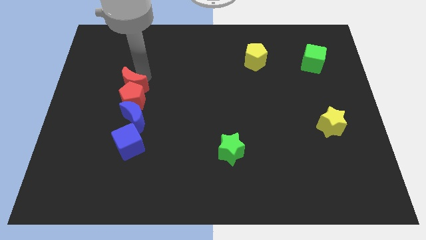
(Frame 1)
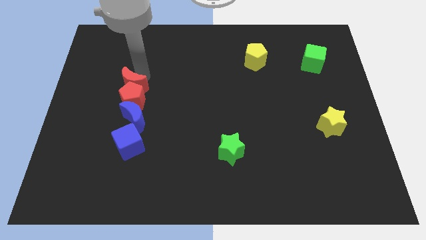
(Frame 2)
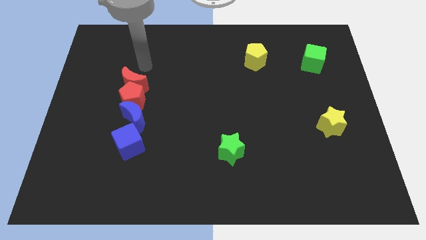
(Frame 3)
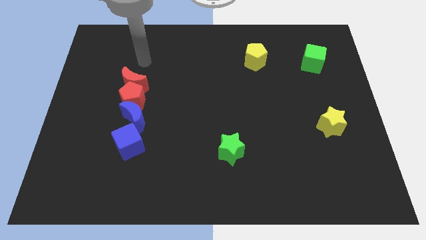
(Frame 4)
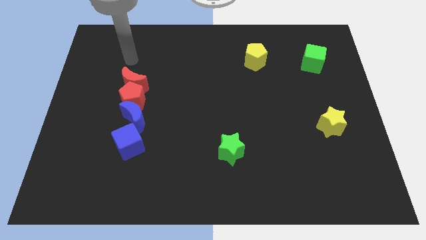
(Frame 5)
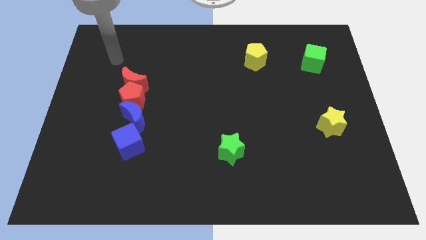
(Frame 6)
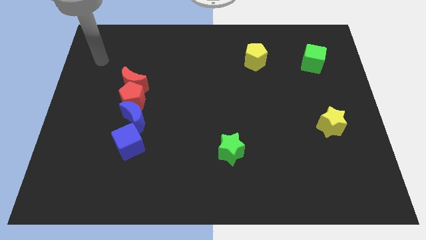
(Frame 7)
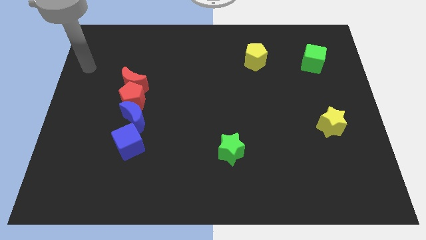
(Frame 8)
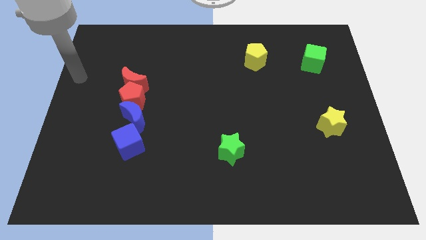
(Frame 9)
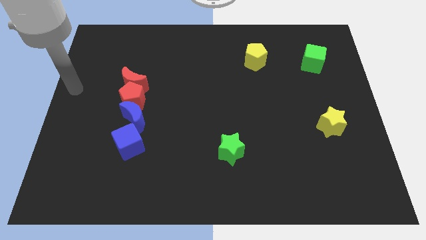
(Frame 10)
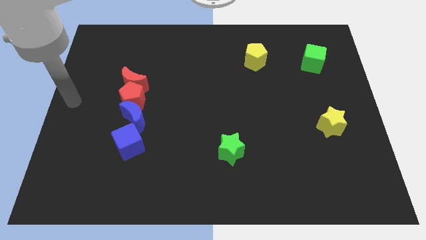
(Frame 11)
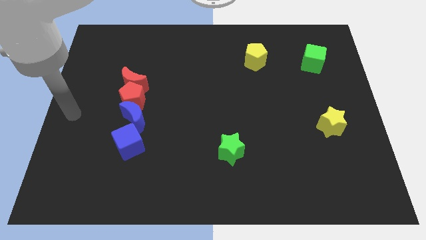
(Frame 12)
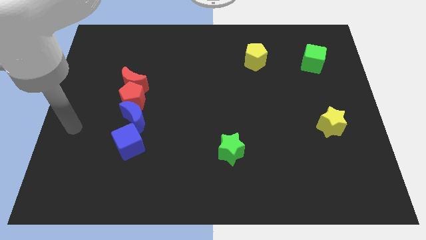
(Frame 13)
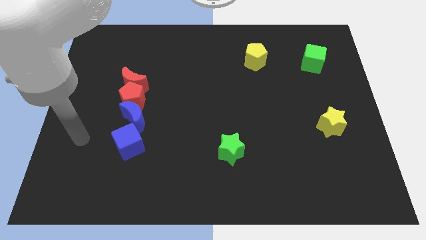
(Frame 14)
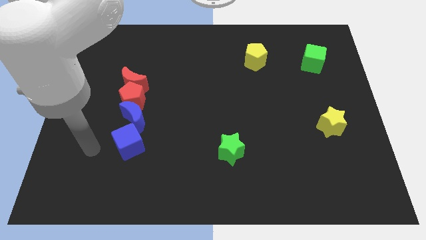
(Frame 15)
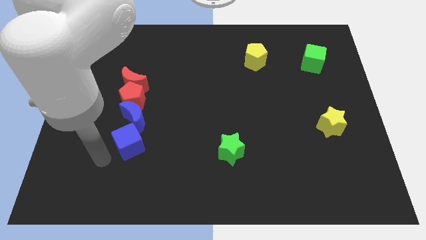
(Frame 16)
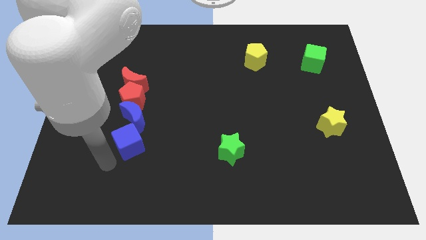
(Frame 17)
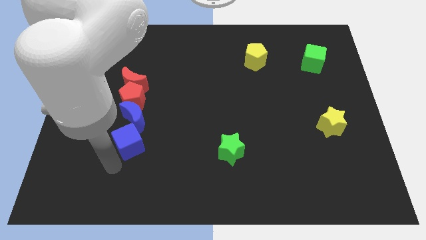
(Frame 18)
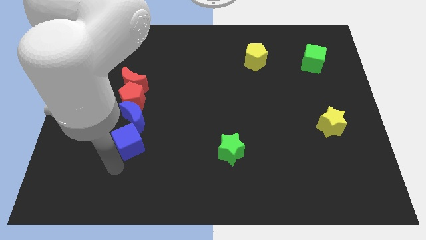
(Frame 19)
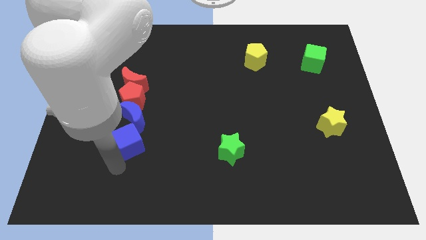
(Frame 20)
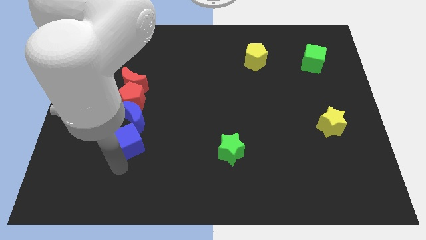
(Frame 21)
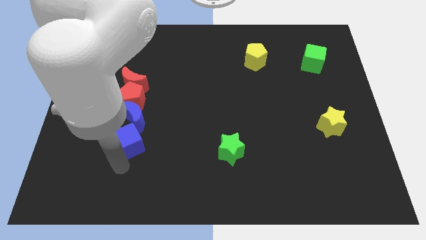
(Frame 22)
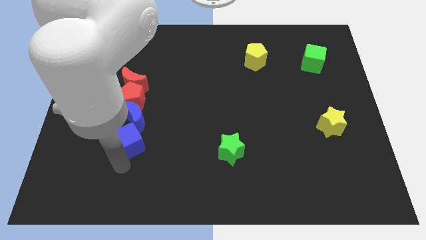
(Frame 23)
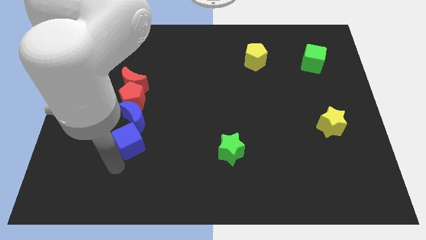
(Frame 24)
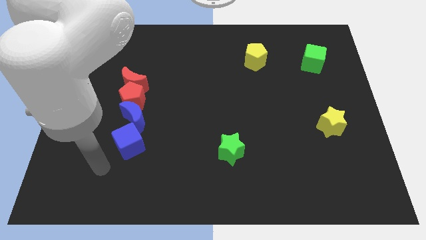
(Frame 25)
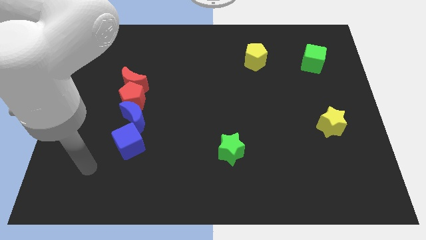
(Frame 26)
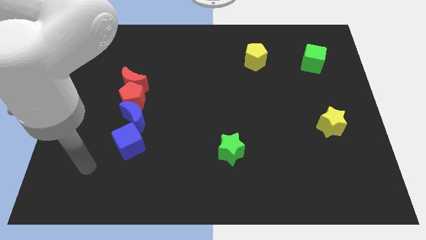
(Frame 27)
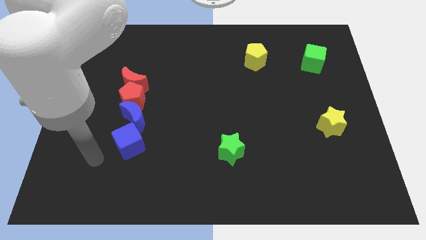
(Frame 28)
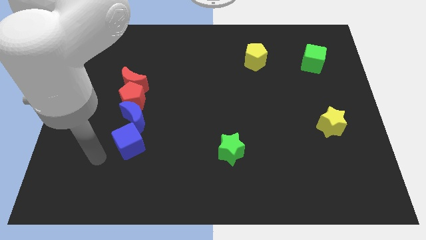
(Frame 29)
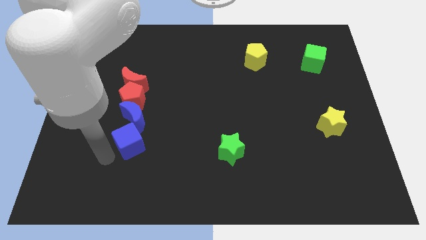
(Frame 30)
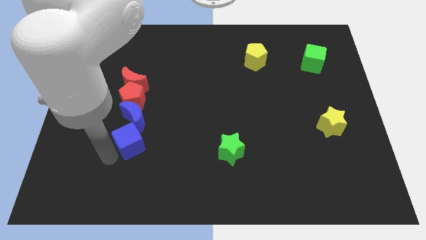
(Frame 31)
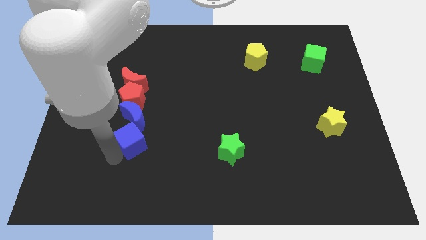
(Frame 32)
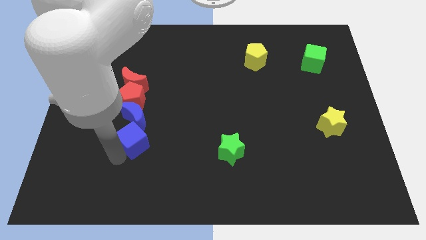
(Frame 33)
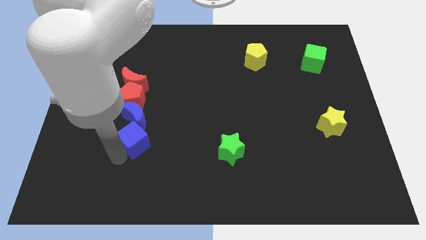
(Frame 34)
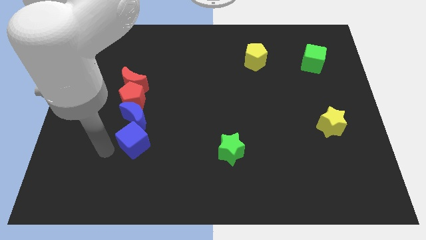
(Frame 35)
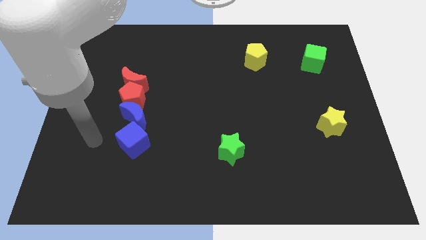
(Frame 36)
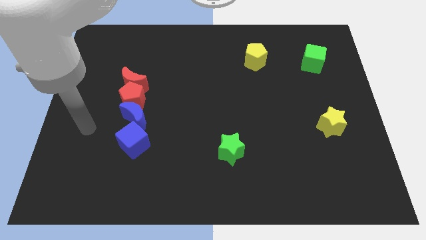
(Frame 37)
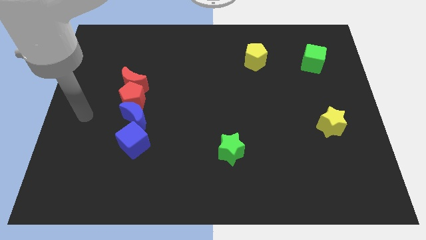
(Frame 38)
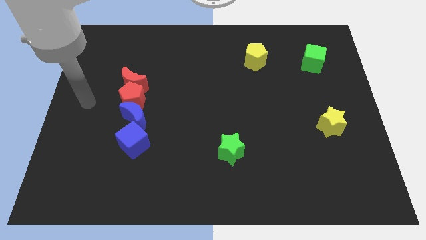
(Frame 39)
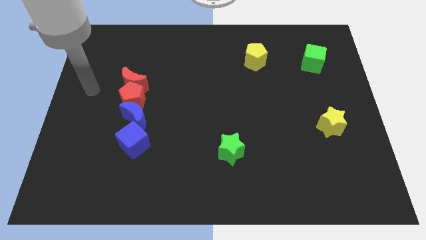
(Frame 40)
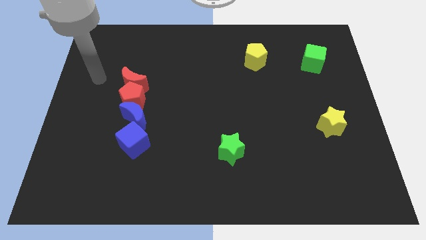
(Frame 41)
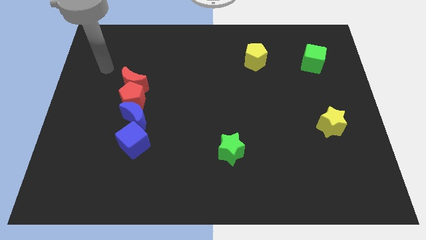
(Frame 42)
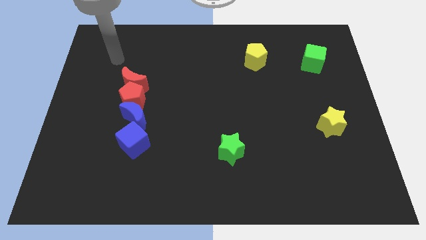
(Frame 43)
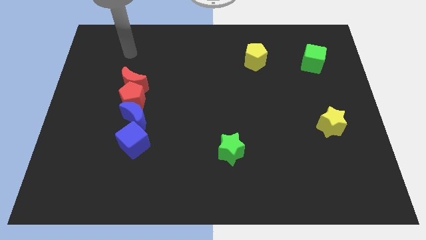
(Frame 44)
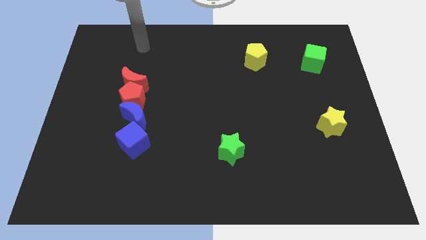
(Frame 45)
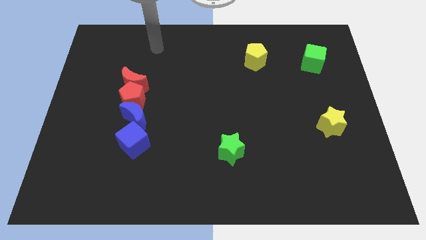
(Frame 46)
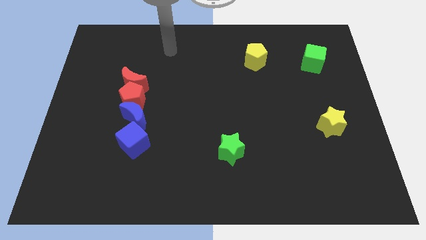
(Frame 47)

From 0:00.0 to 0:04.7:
adjust the blue moon slightly with a blue cube

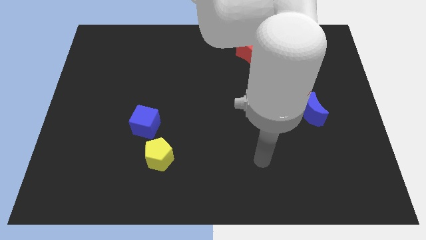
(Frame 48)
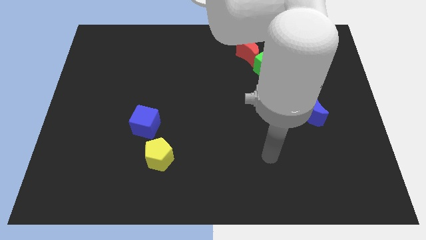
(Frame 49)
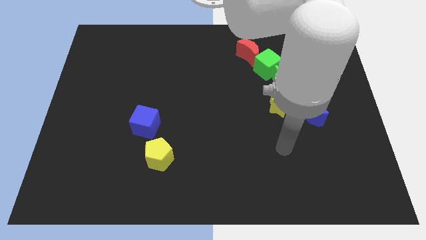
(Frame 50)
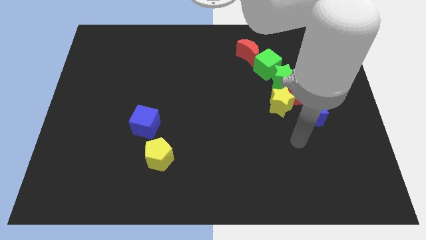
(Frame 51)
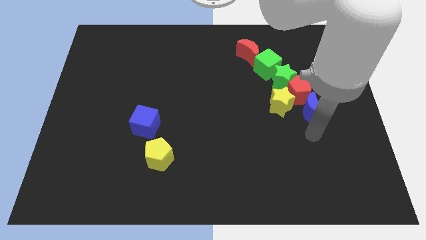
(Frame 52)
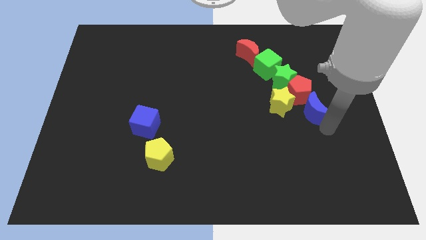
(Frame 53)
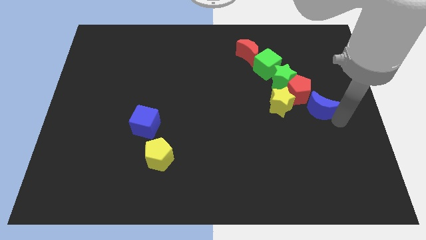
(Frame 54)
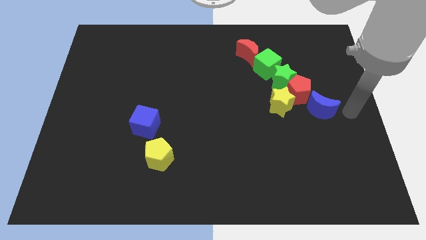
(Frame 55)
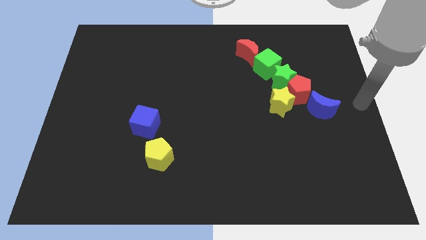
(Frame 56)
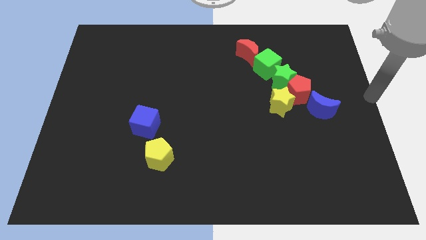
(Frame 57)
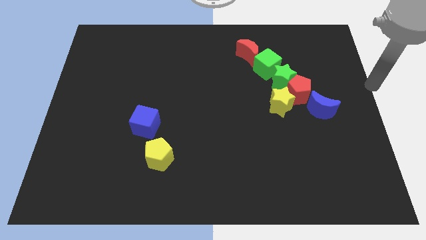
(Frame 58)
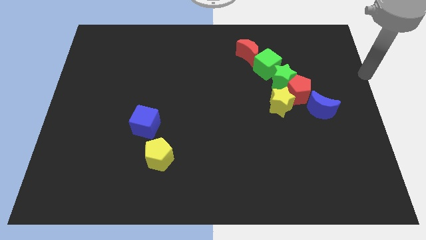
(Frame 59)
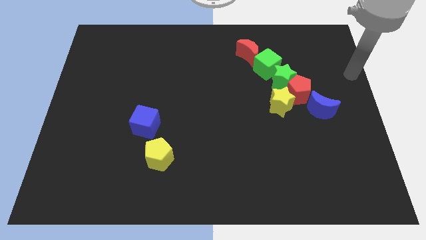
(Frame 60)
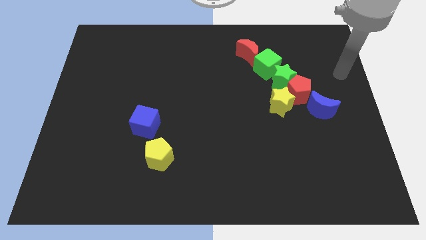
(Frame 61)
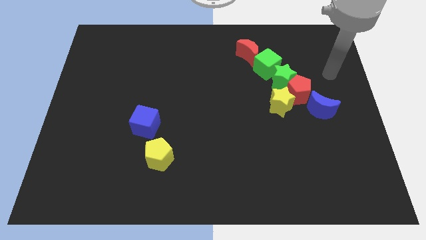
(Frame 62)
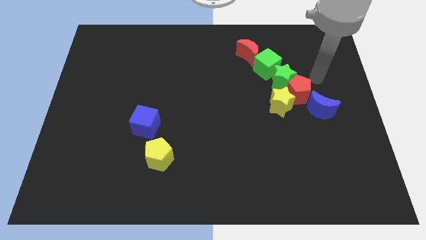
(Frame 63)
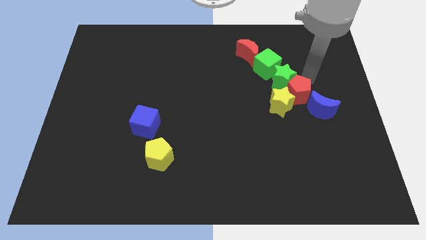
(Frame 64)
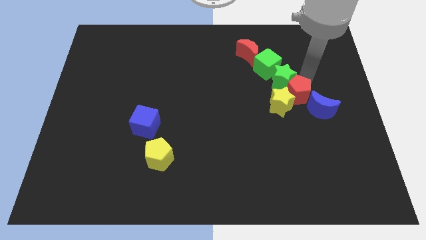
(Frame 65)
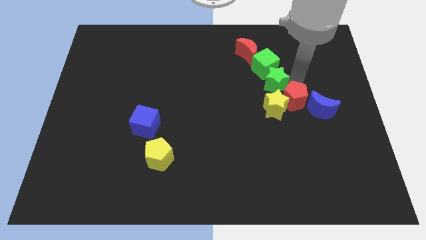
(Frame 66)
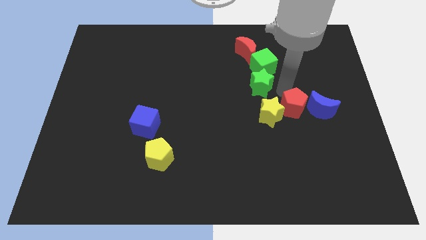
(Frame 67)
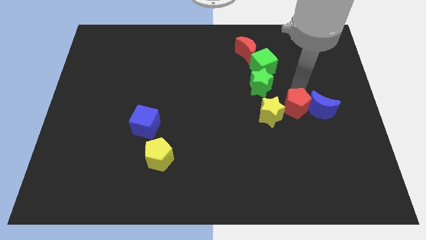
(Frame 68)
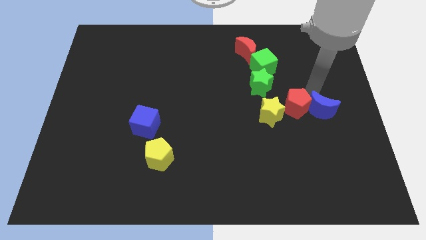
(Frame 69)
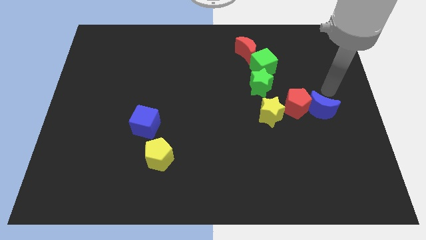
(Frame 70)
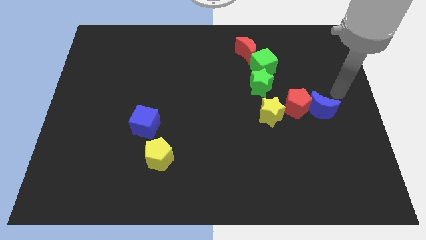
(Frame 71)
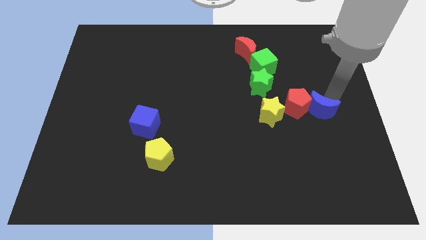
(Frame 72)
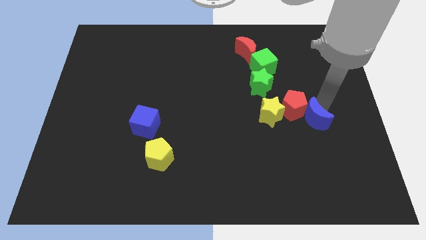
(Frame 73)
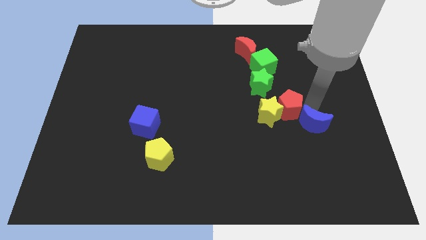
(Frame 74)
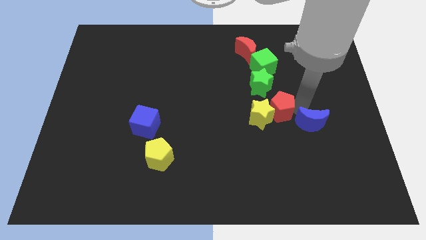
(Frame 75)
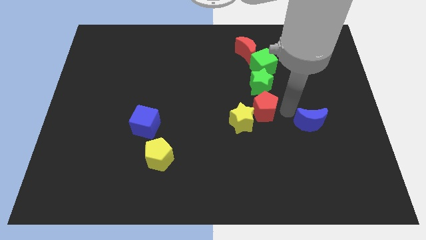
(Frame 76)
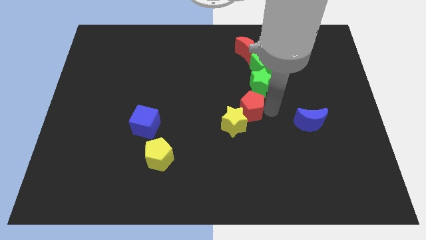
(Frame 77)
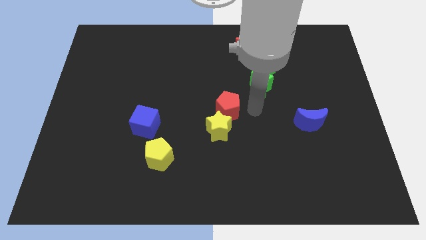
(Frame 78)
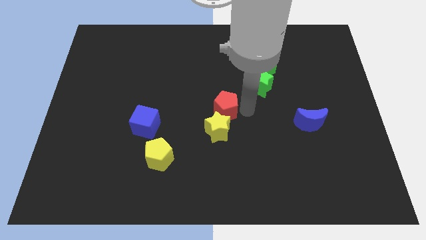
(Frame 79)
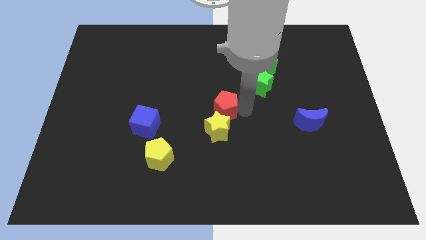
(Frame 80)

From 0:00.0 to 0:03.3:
move the yellow star and red pentagon towards the center

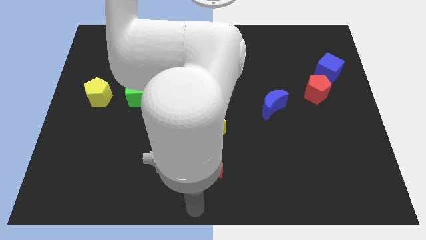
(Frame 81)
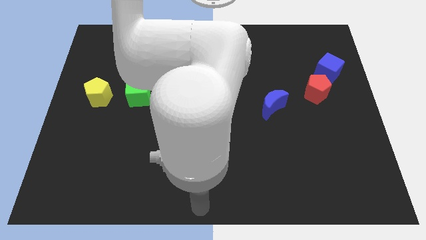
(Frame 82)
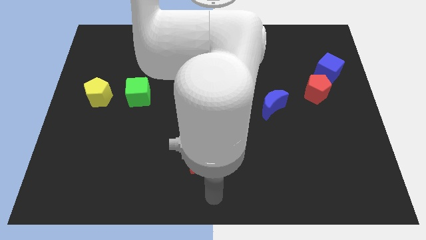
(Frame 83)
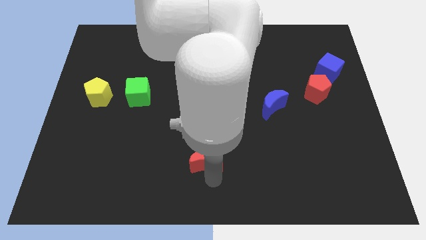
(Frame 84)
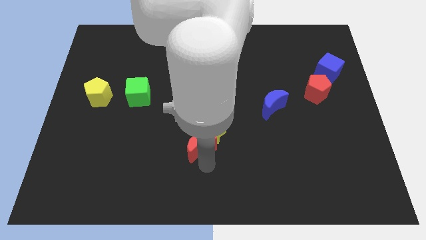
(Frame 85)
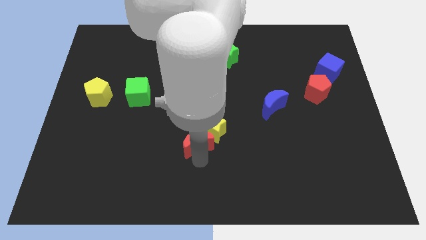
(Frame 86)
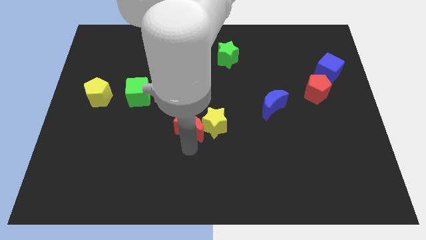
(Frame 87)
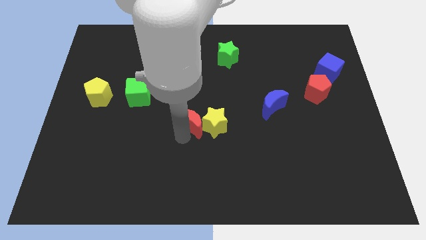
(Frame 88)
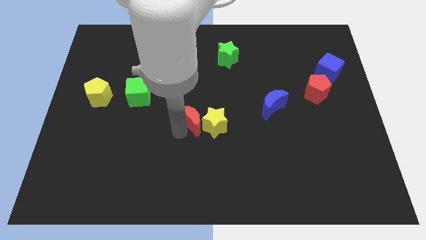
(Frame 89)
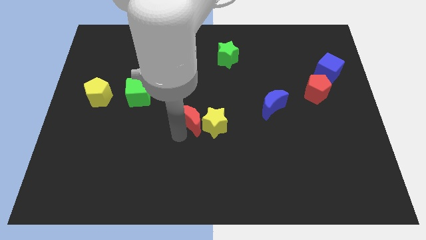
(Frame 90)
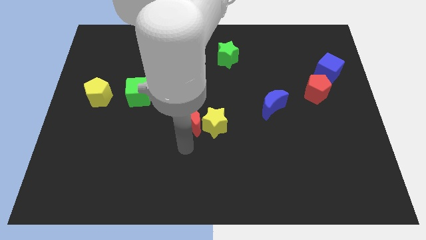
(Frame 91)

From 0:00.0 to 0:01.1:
push red half moon upwards
